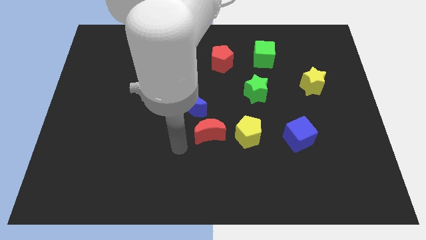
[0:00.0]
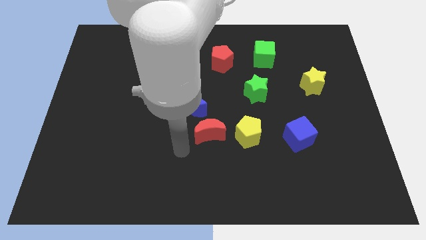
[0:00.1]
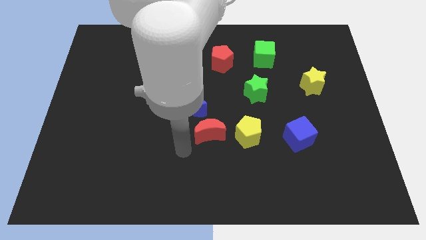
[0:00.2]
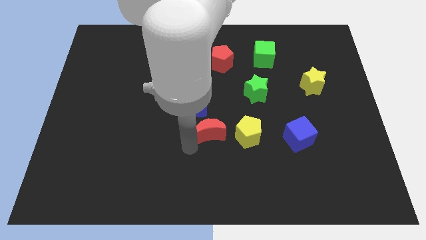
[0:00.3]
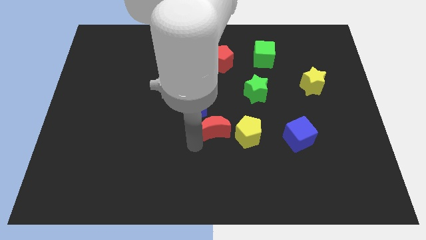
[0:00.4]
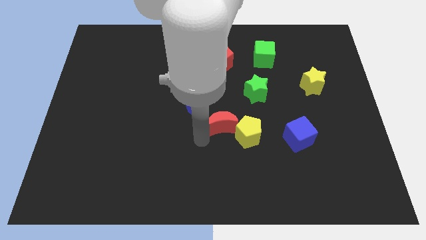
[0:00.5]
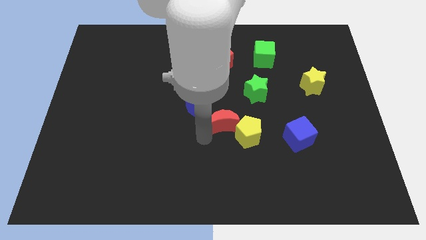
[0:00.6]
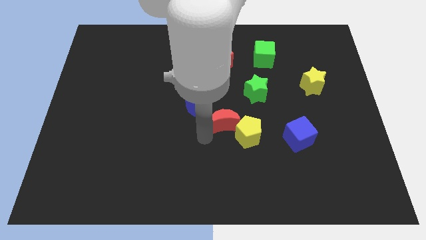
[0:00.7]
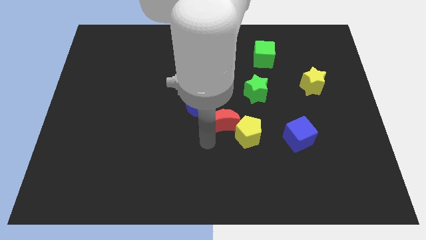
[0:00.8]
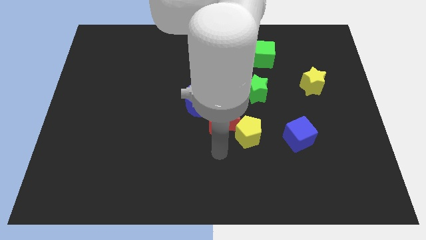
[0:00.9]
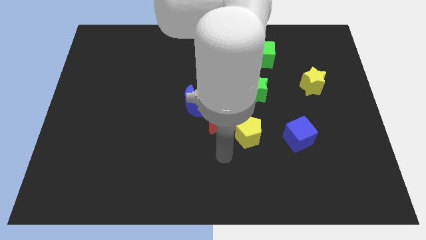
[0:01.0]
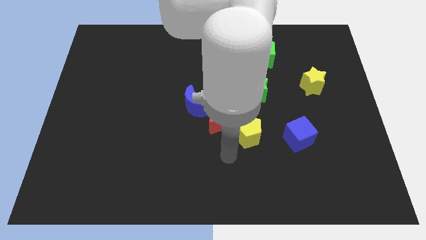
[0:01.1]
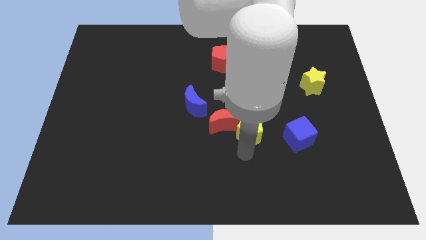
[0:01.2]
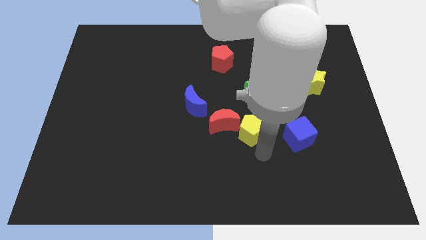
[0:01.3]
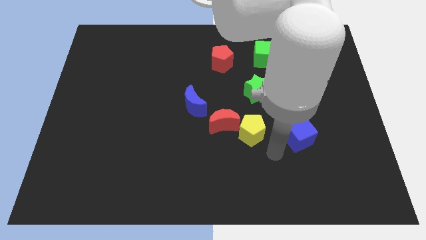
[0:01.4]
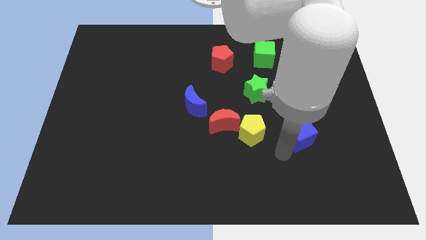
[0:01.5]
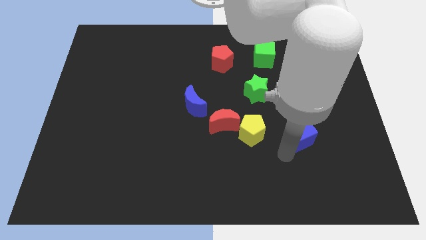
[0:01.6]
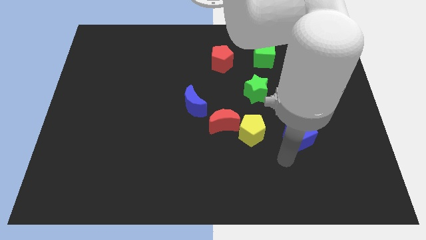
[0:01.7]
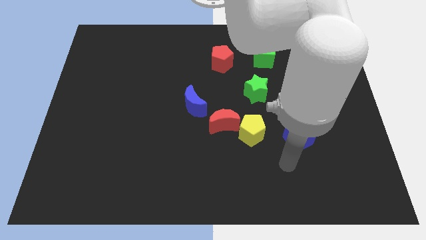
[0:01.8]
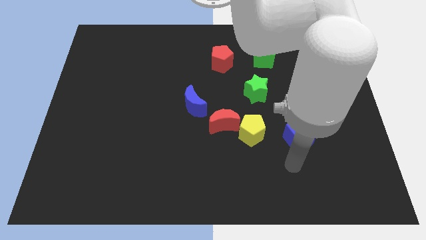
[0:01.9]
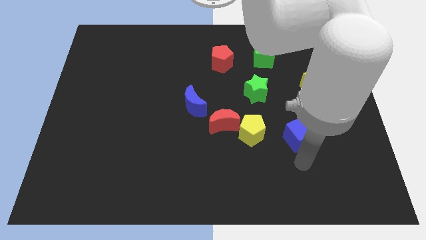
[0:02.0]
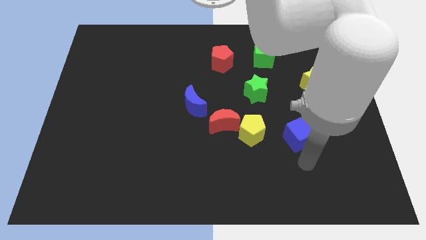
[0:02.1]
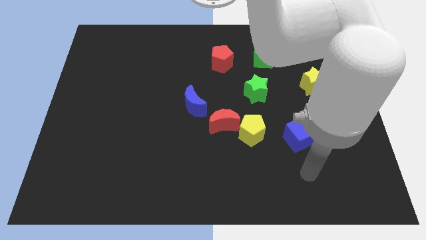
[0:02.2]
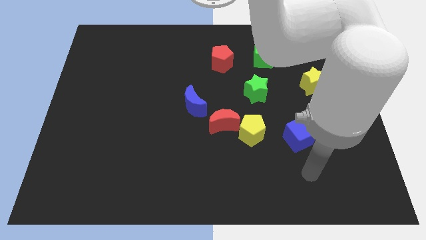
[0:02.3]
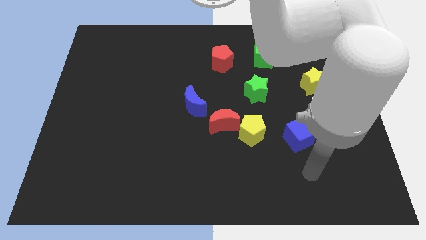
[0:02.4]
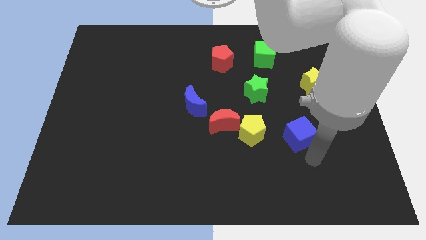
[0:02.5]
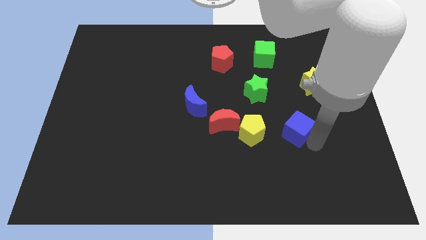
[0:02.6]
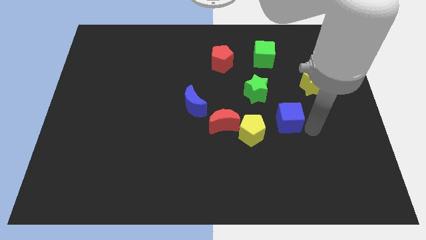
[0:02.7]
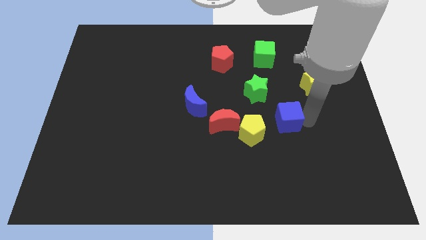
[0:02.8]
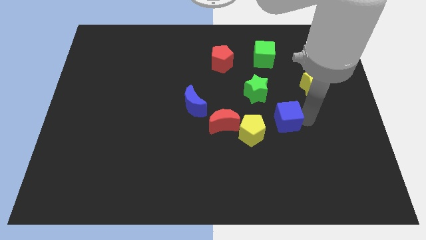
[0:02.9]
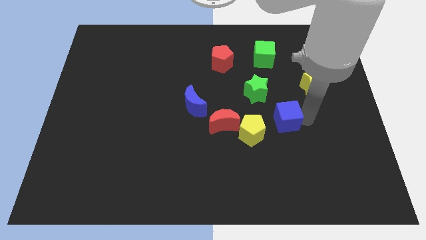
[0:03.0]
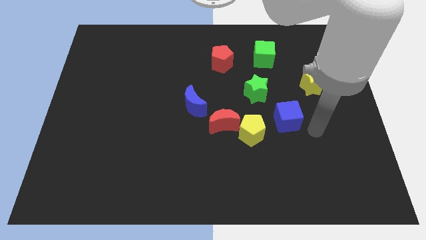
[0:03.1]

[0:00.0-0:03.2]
move the red moon and blue cube towards the yellow pentagon

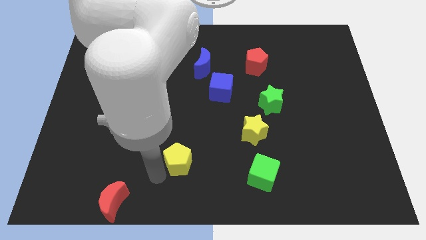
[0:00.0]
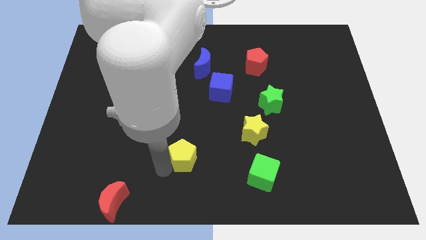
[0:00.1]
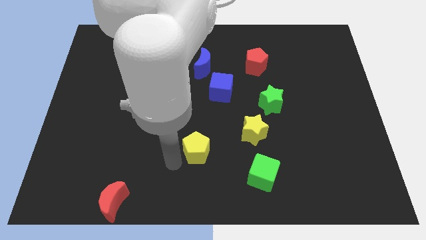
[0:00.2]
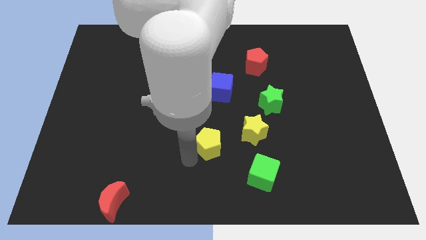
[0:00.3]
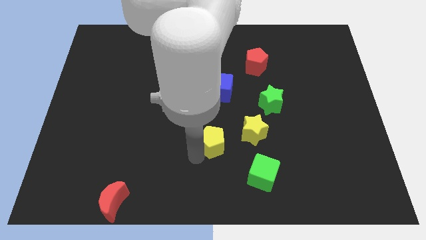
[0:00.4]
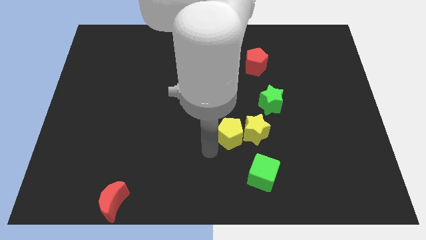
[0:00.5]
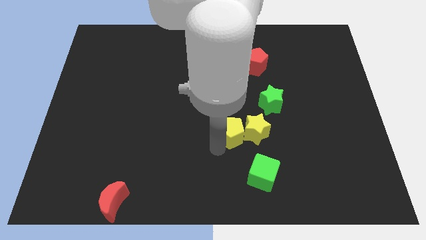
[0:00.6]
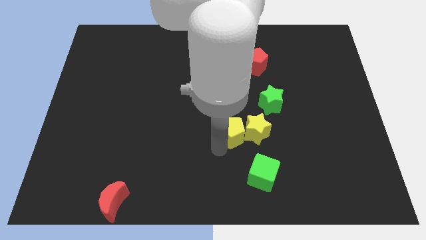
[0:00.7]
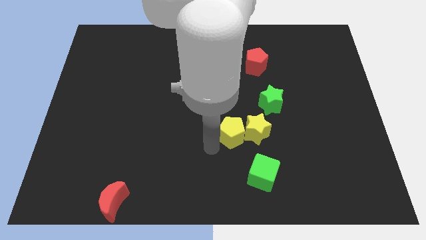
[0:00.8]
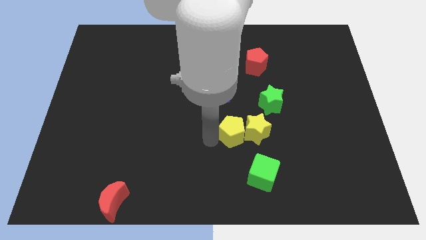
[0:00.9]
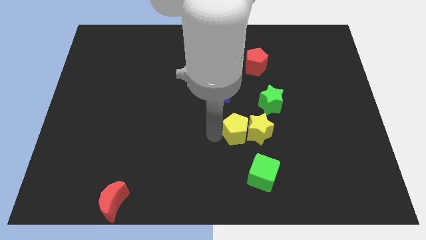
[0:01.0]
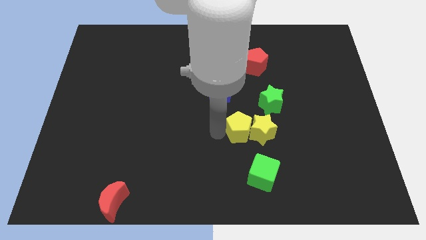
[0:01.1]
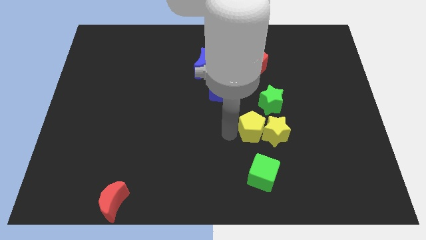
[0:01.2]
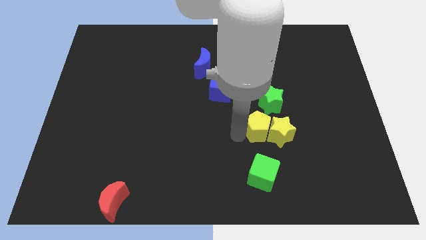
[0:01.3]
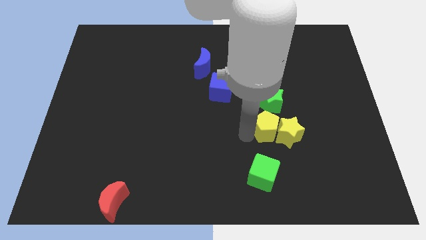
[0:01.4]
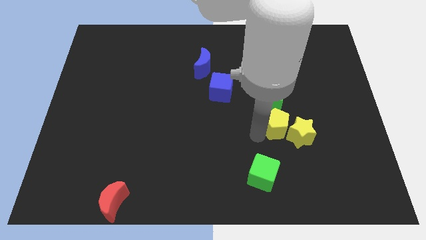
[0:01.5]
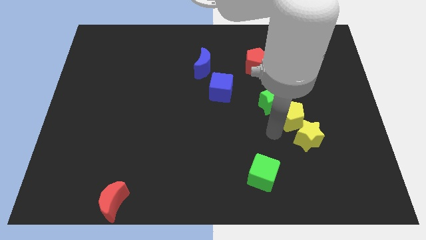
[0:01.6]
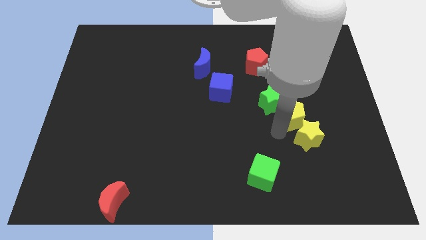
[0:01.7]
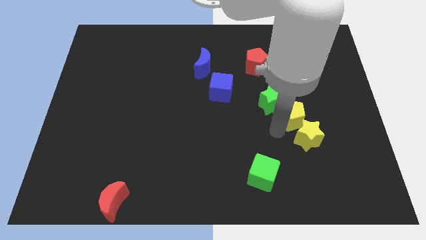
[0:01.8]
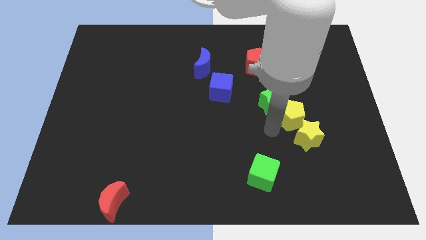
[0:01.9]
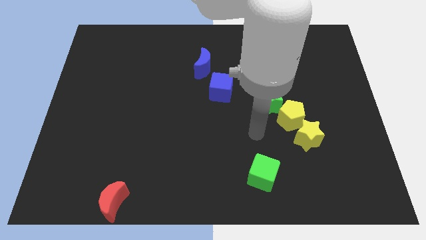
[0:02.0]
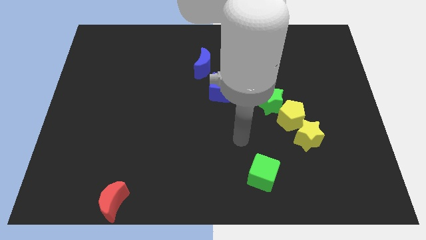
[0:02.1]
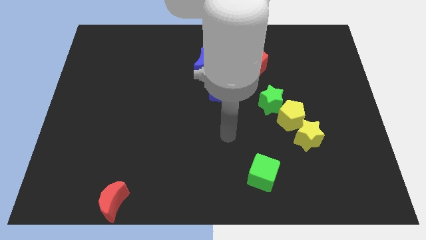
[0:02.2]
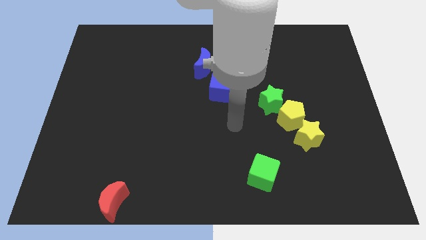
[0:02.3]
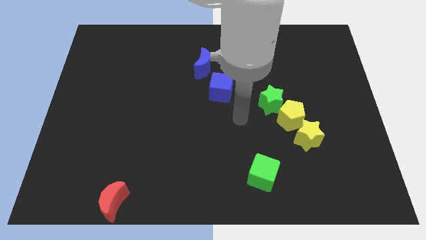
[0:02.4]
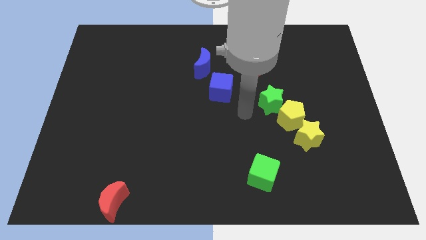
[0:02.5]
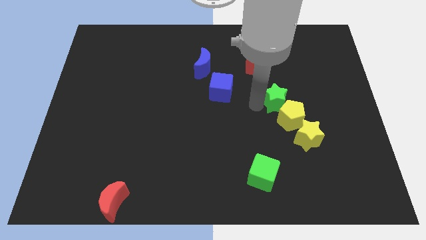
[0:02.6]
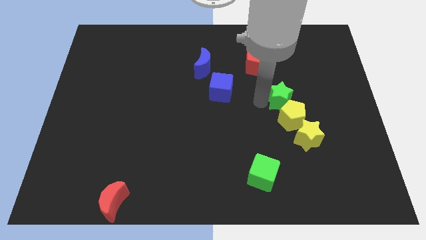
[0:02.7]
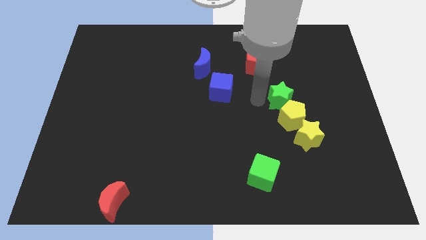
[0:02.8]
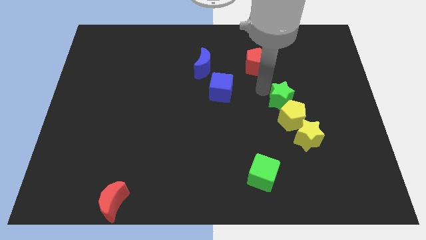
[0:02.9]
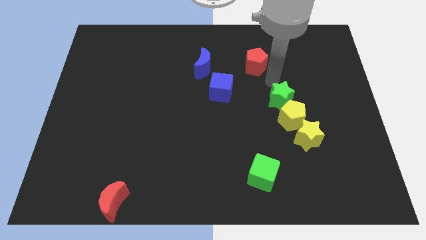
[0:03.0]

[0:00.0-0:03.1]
push the yellow blocks and green star towards the center right side of the board

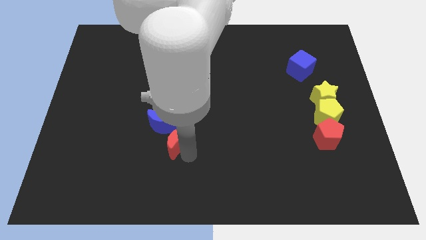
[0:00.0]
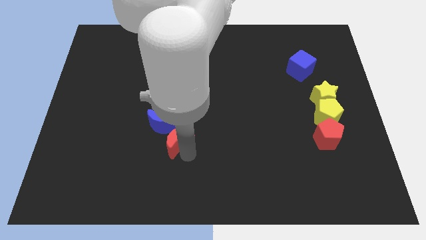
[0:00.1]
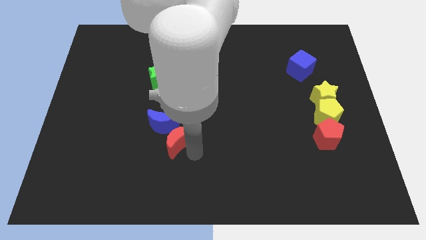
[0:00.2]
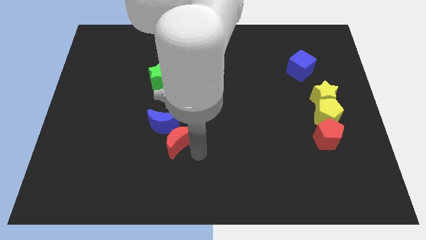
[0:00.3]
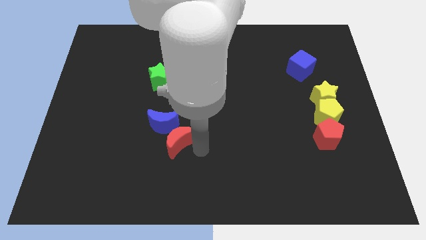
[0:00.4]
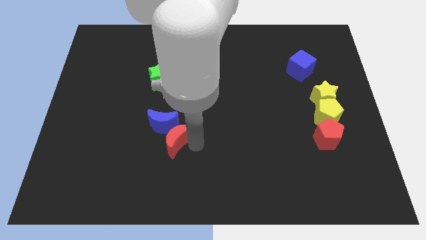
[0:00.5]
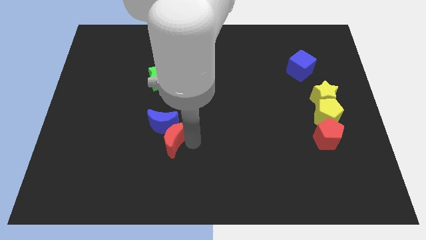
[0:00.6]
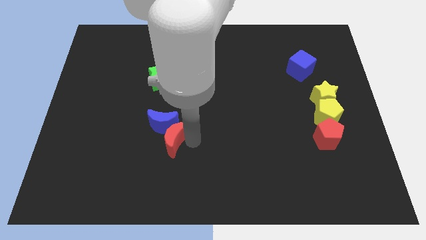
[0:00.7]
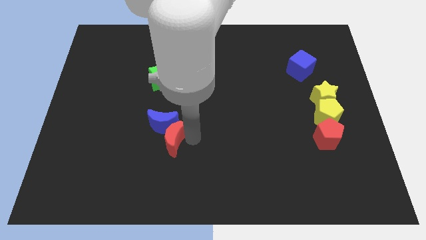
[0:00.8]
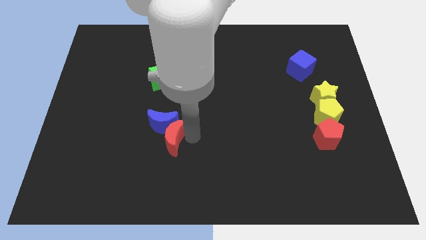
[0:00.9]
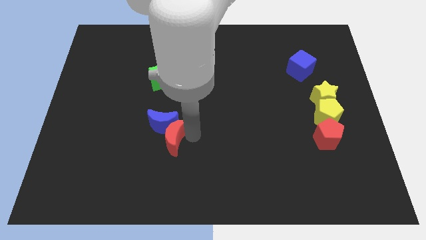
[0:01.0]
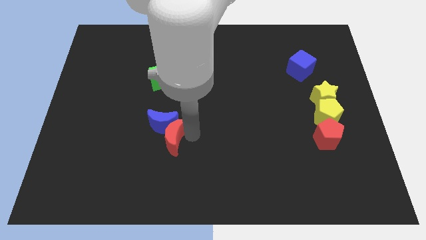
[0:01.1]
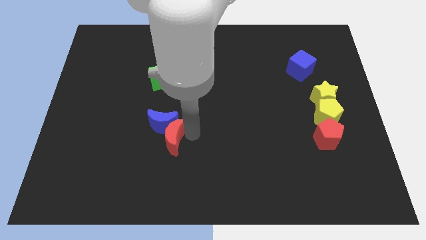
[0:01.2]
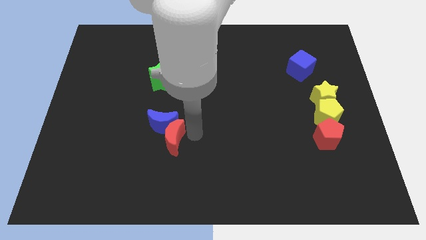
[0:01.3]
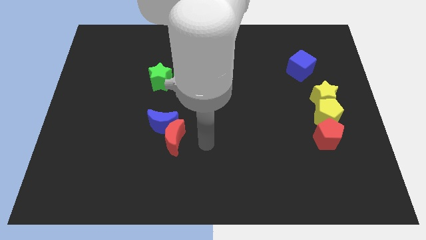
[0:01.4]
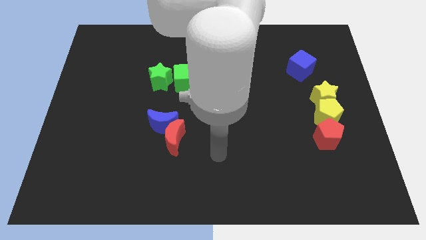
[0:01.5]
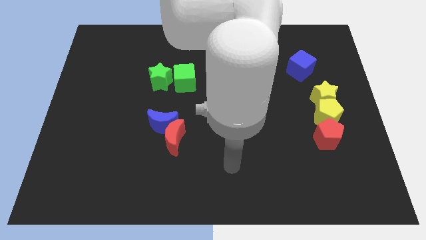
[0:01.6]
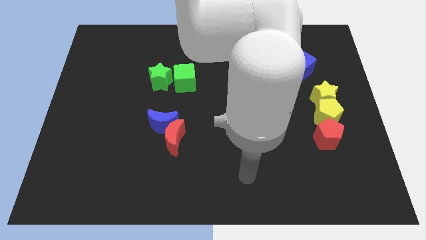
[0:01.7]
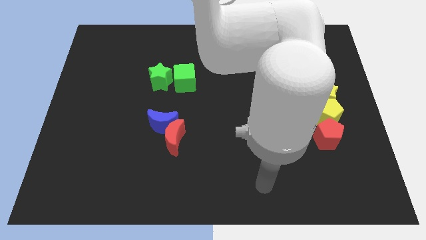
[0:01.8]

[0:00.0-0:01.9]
move the red moon into the blue moon

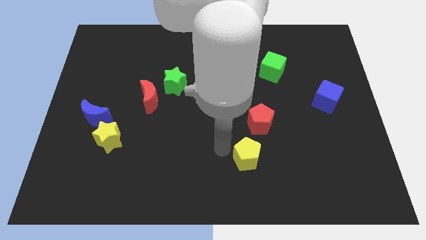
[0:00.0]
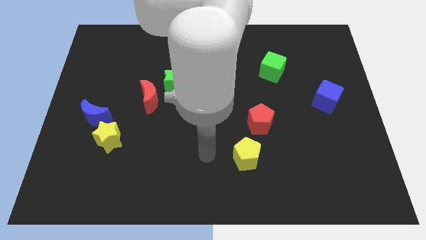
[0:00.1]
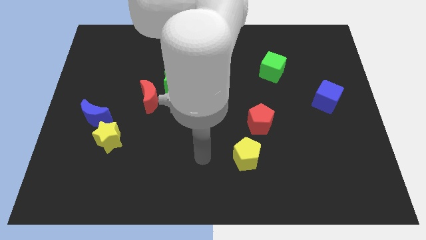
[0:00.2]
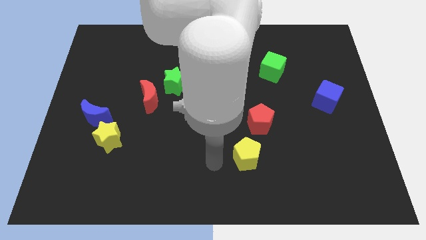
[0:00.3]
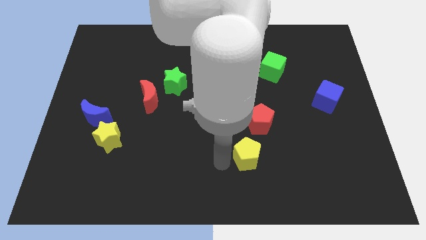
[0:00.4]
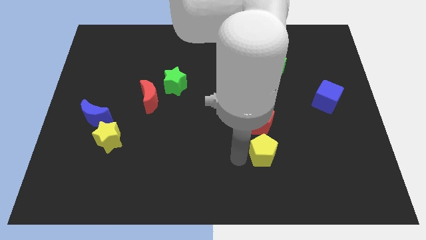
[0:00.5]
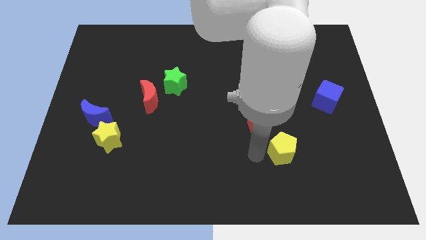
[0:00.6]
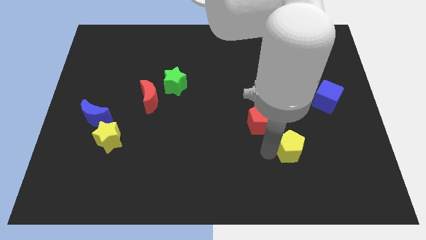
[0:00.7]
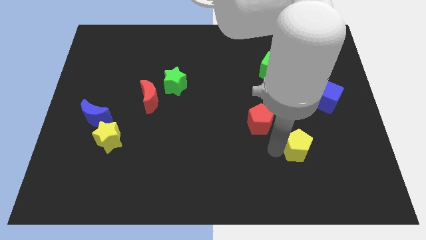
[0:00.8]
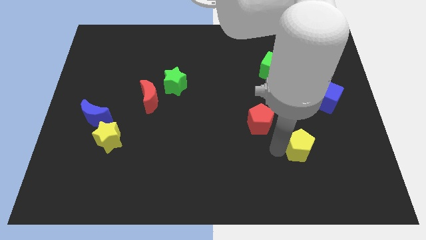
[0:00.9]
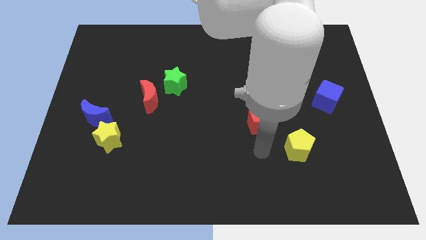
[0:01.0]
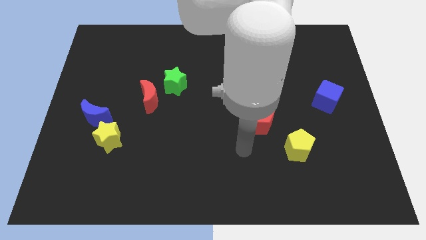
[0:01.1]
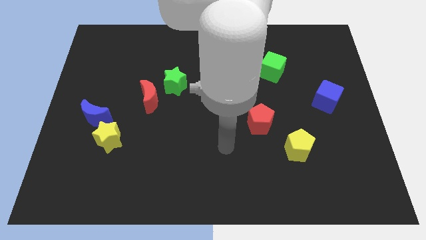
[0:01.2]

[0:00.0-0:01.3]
move the yellow pentagon diagonal to the blue cube
